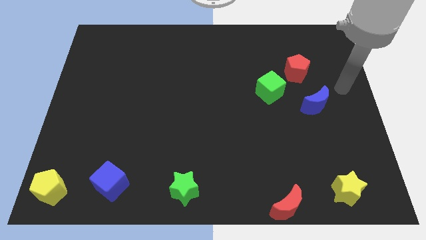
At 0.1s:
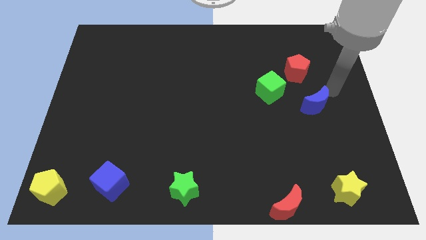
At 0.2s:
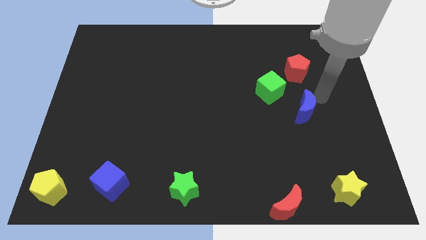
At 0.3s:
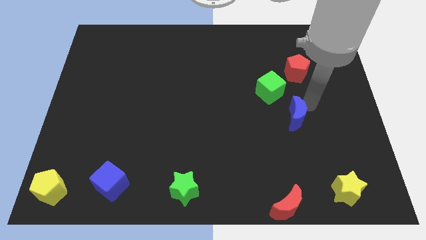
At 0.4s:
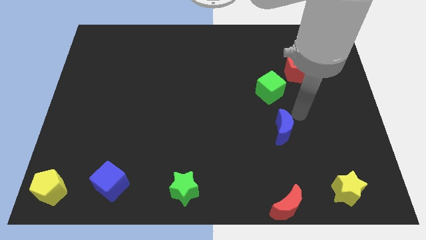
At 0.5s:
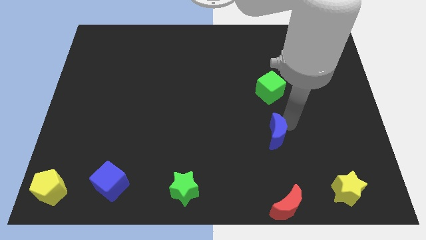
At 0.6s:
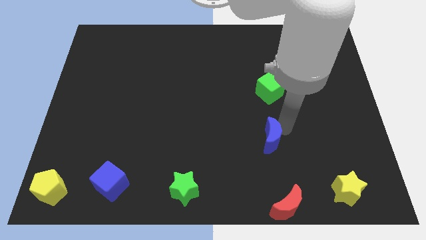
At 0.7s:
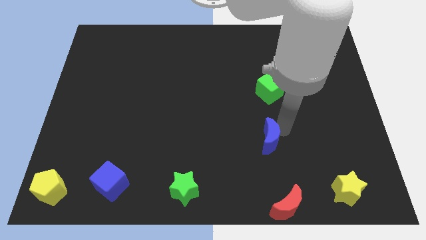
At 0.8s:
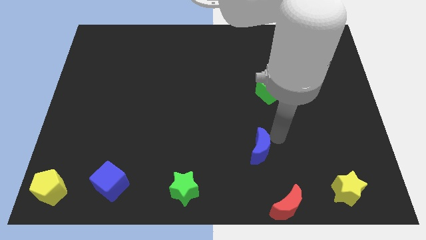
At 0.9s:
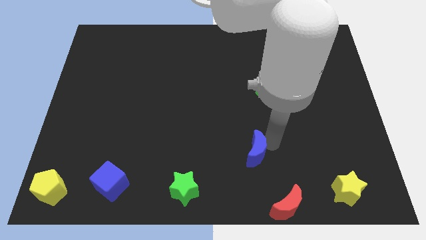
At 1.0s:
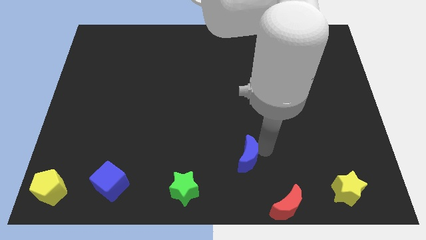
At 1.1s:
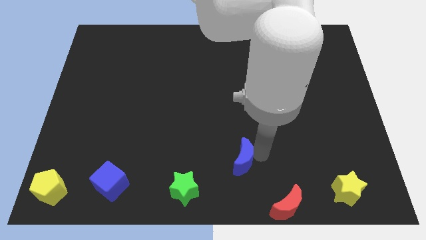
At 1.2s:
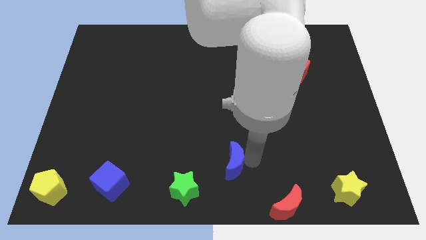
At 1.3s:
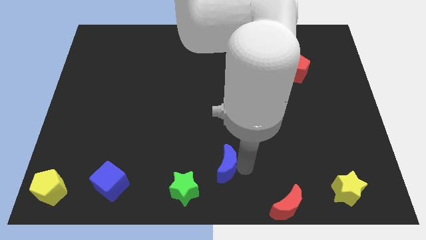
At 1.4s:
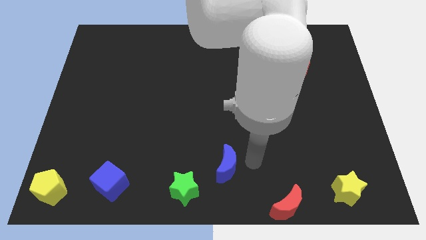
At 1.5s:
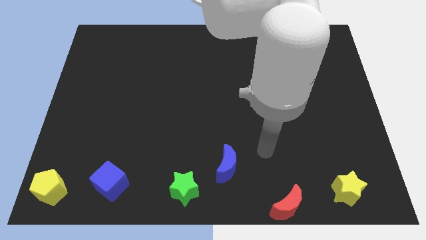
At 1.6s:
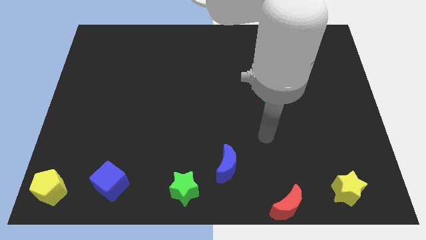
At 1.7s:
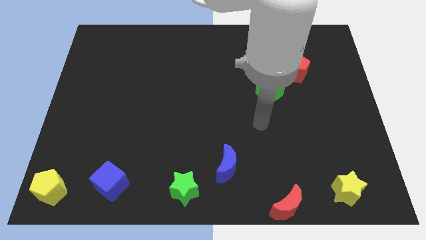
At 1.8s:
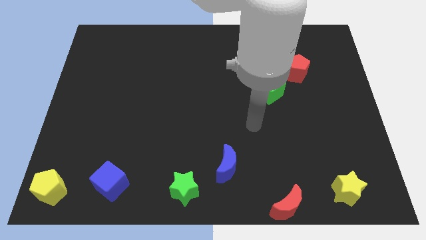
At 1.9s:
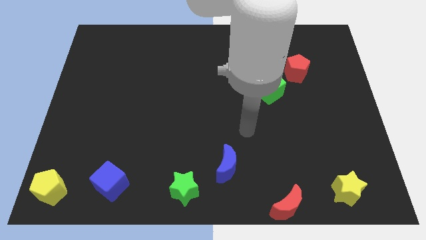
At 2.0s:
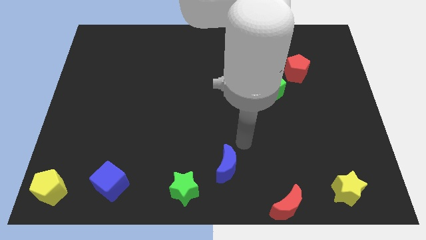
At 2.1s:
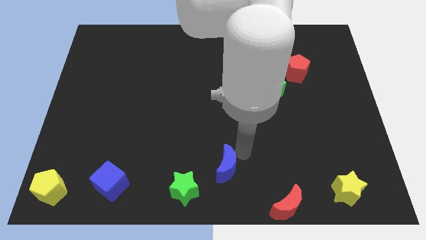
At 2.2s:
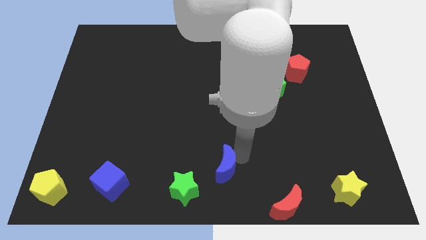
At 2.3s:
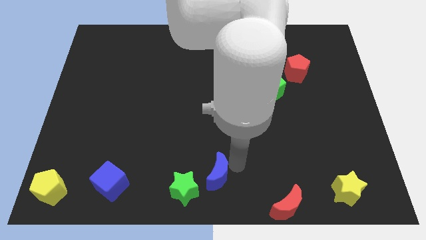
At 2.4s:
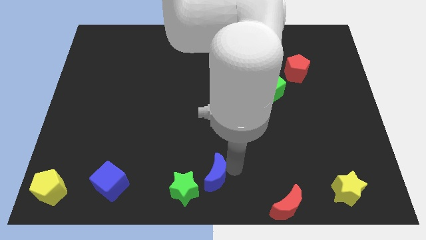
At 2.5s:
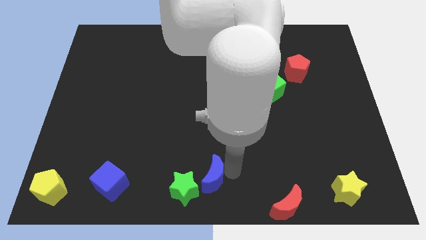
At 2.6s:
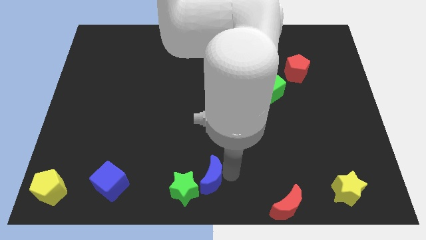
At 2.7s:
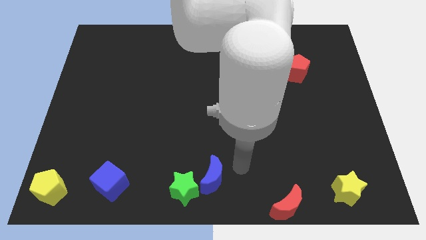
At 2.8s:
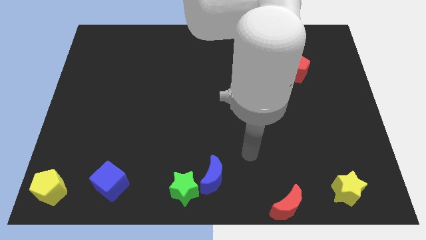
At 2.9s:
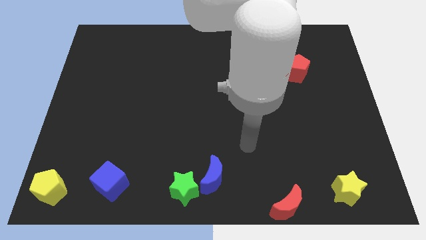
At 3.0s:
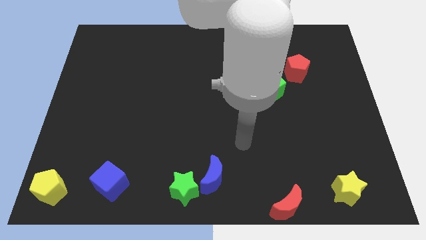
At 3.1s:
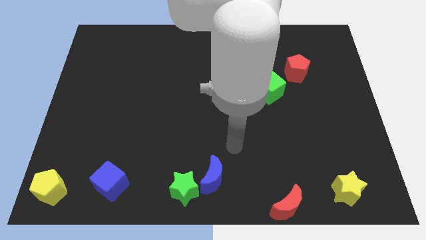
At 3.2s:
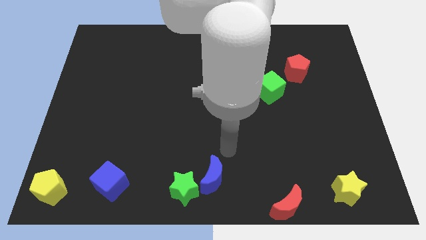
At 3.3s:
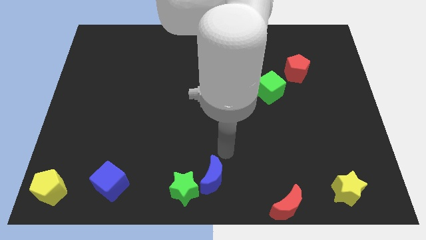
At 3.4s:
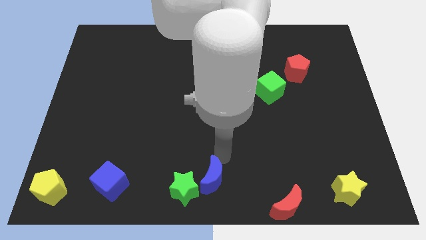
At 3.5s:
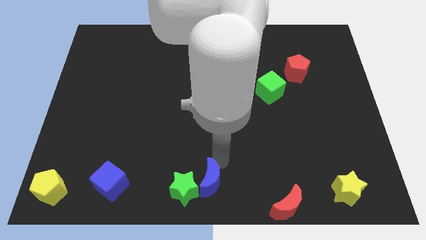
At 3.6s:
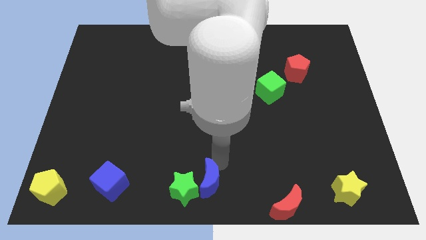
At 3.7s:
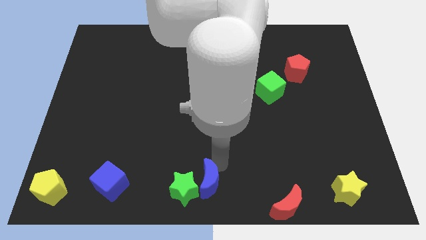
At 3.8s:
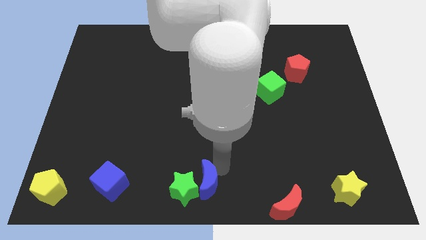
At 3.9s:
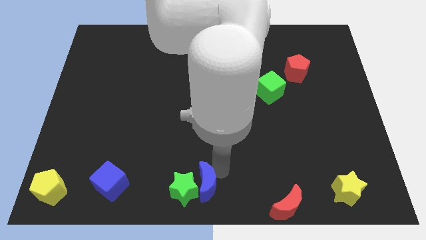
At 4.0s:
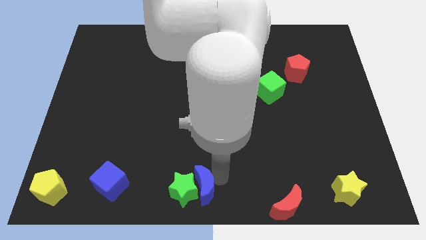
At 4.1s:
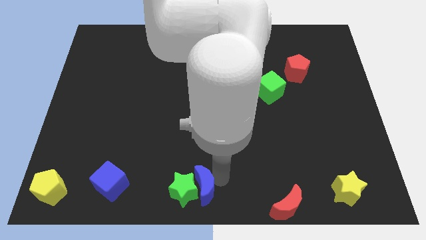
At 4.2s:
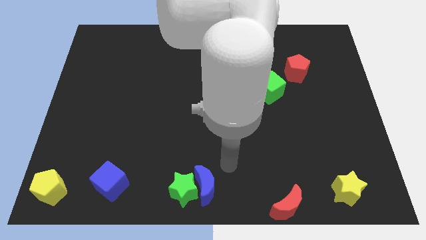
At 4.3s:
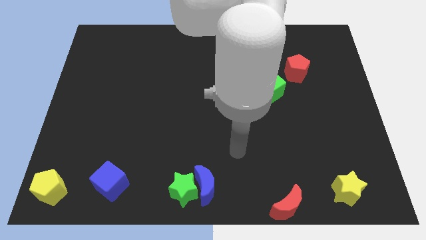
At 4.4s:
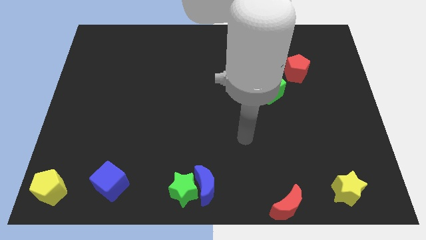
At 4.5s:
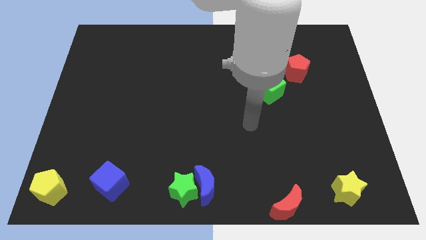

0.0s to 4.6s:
move the blue crescent into the right side of the green star

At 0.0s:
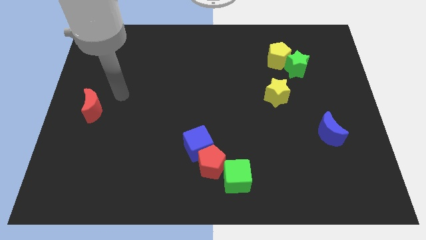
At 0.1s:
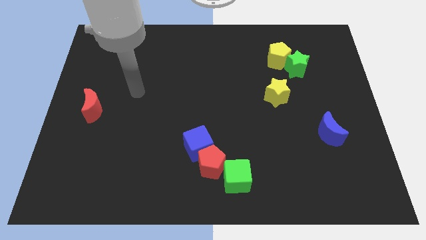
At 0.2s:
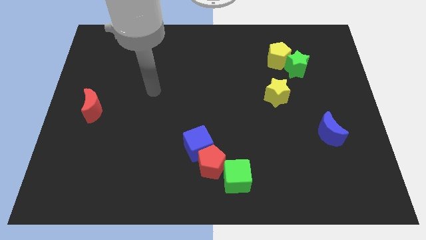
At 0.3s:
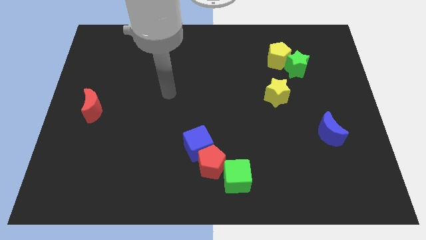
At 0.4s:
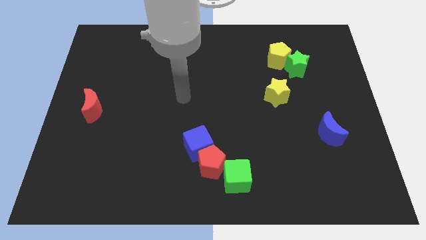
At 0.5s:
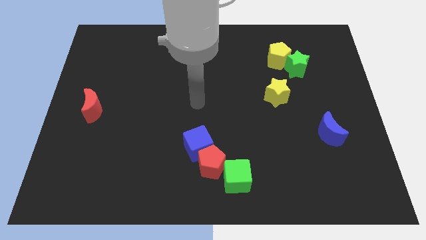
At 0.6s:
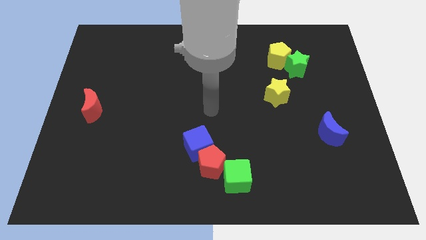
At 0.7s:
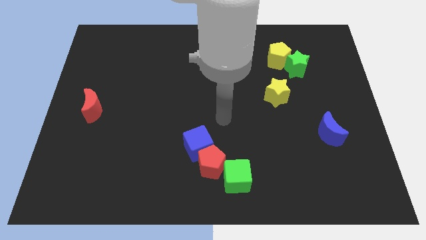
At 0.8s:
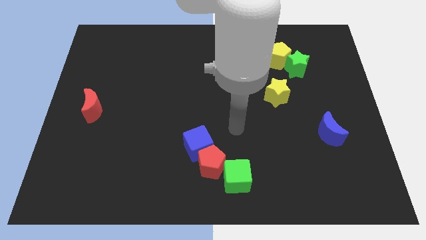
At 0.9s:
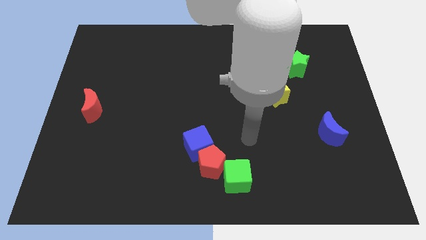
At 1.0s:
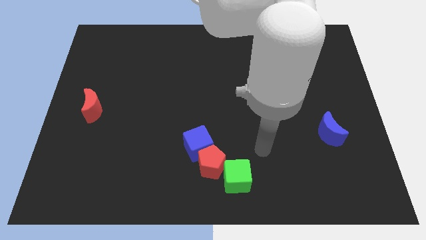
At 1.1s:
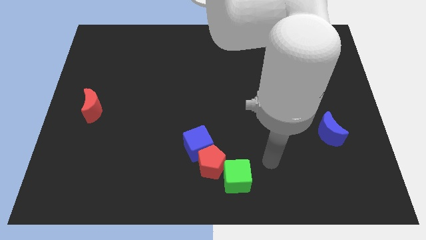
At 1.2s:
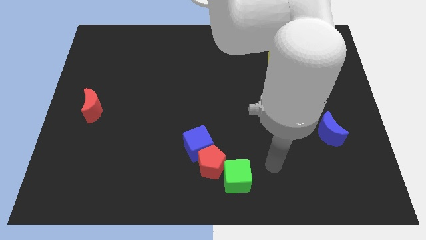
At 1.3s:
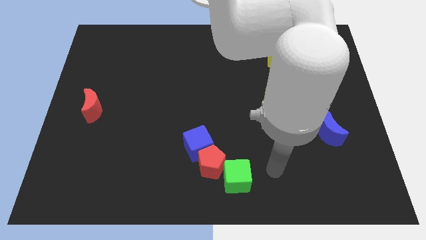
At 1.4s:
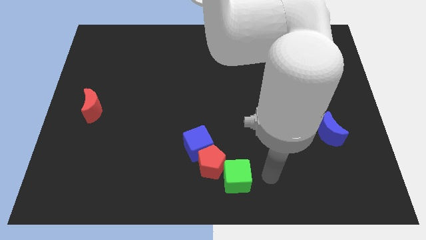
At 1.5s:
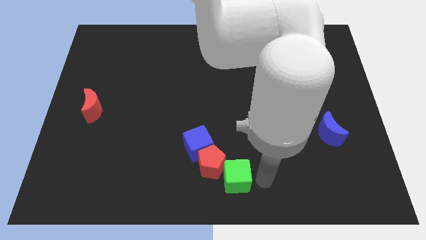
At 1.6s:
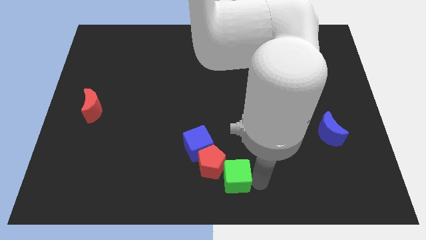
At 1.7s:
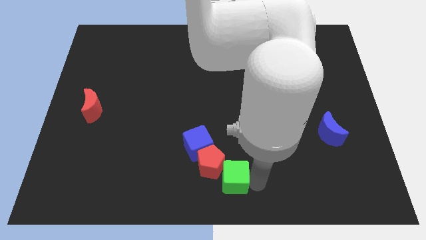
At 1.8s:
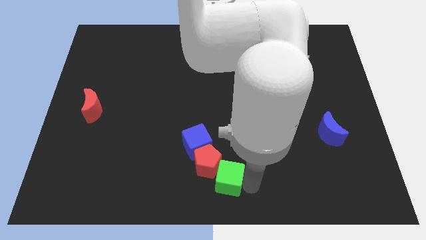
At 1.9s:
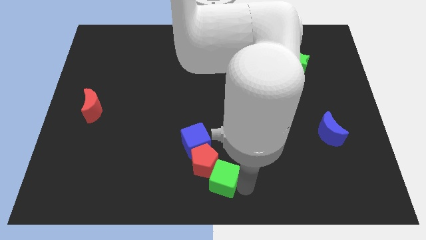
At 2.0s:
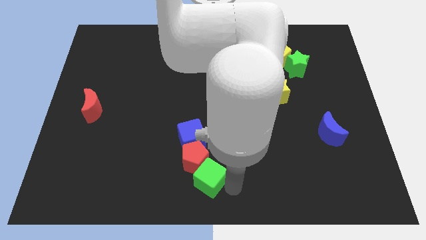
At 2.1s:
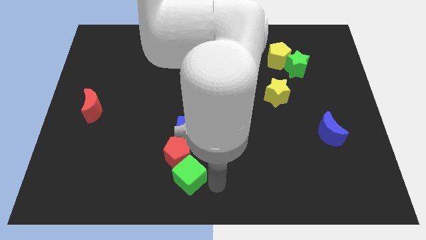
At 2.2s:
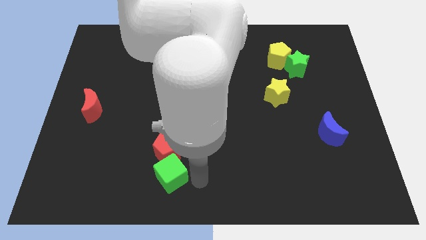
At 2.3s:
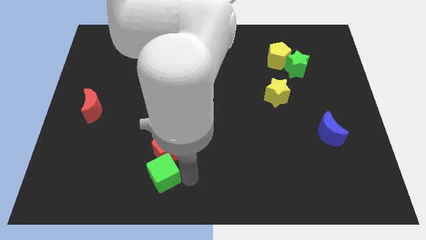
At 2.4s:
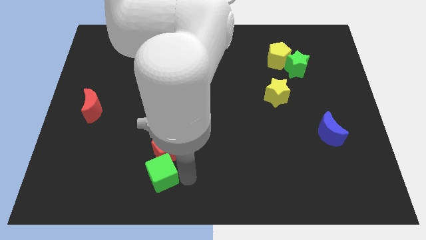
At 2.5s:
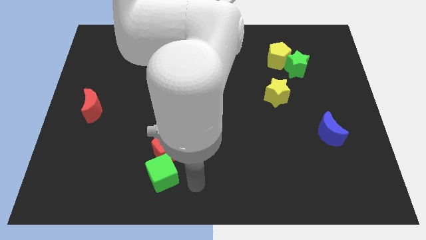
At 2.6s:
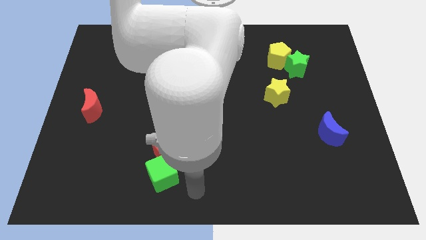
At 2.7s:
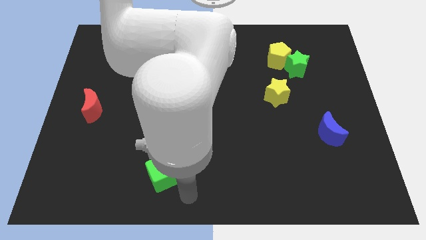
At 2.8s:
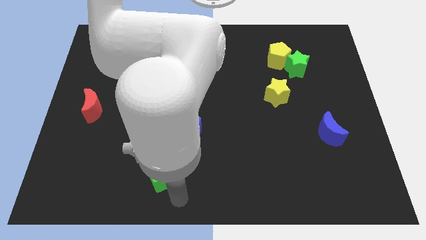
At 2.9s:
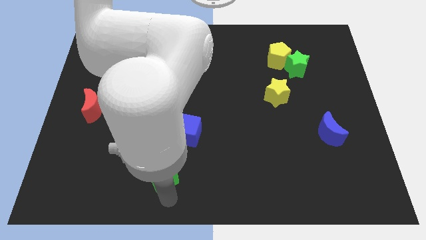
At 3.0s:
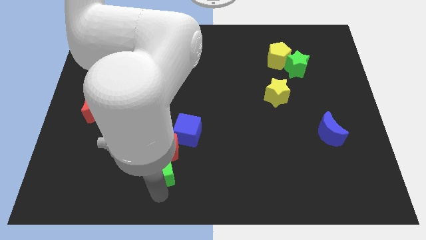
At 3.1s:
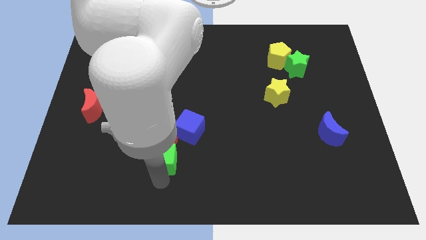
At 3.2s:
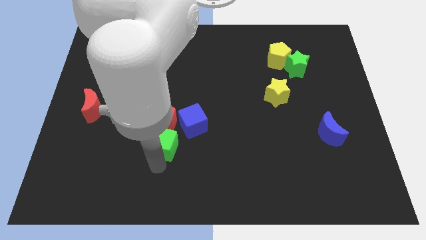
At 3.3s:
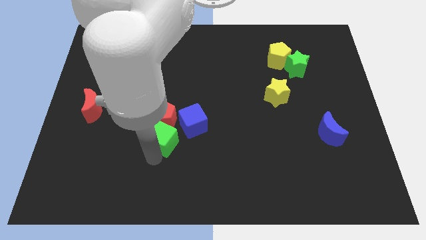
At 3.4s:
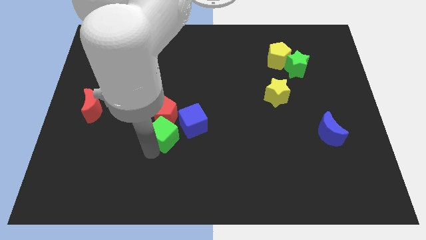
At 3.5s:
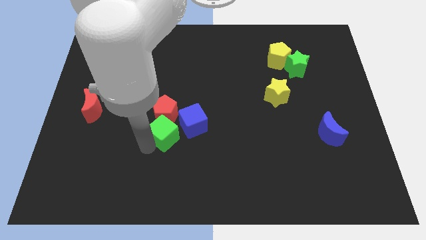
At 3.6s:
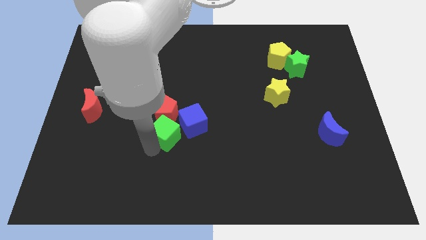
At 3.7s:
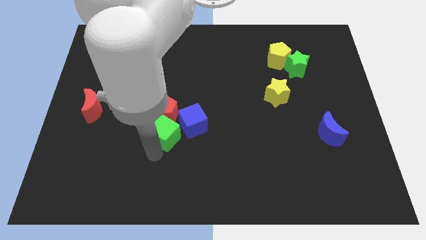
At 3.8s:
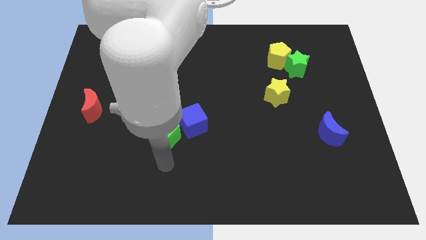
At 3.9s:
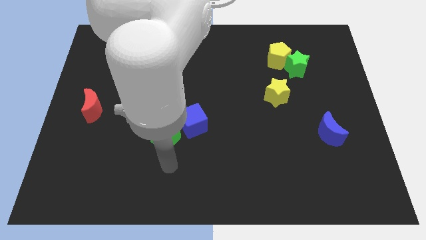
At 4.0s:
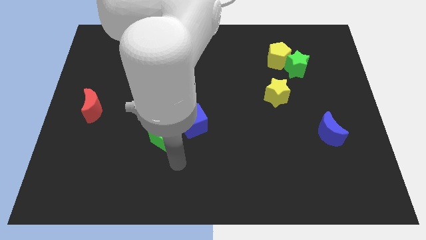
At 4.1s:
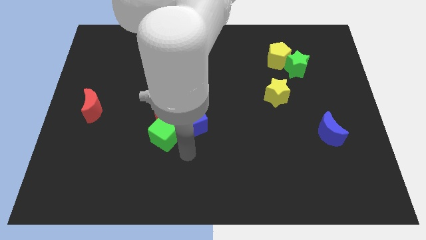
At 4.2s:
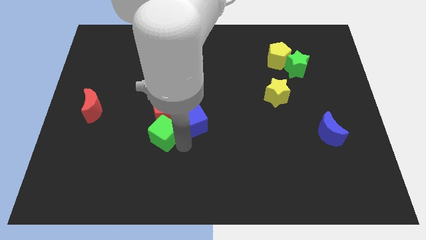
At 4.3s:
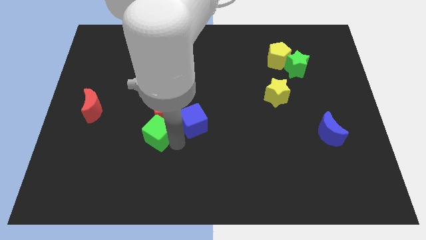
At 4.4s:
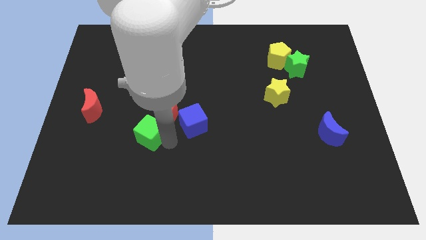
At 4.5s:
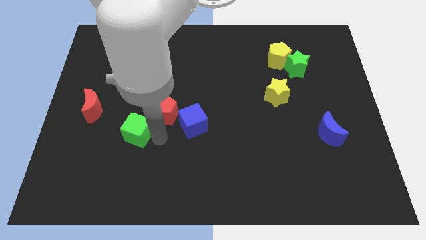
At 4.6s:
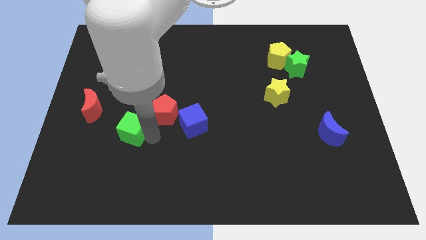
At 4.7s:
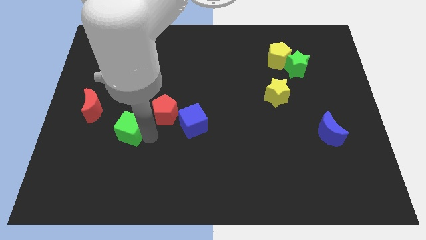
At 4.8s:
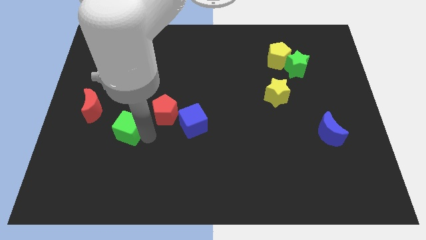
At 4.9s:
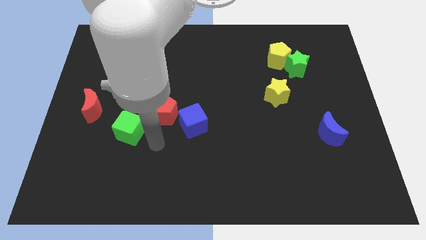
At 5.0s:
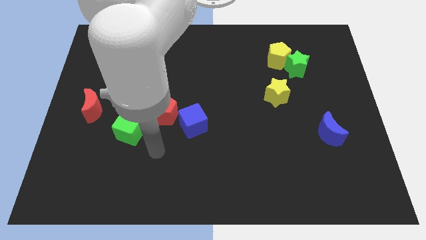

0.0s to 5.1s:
push the green cube to the bottom right of the red crescent
